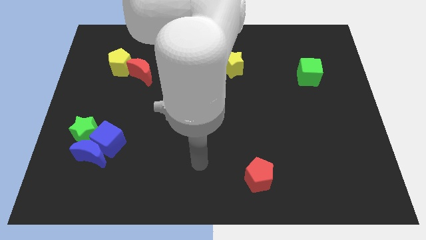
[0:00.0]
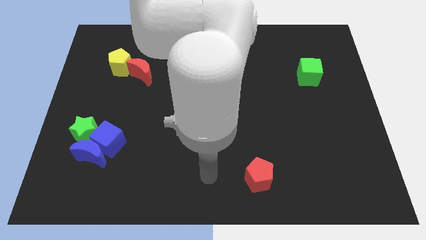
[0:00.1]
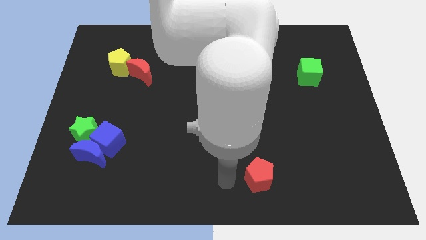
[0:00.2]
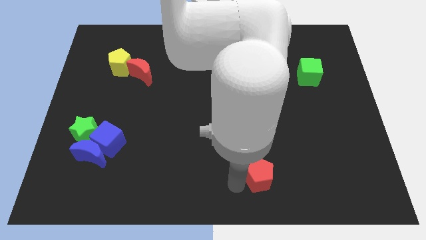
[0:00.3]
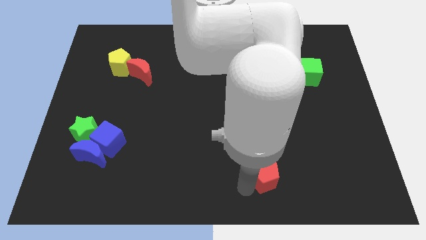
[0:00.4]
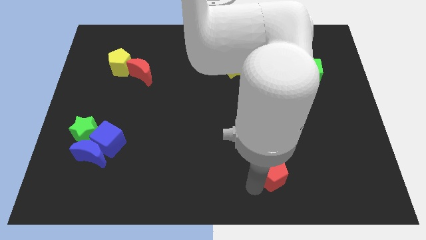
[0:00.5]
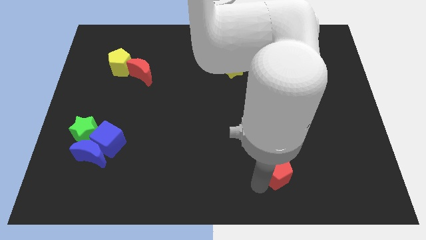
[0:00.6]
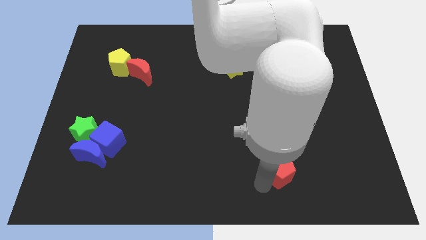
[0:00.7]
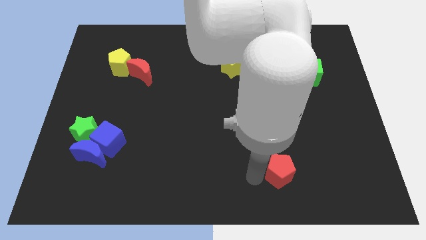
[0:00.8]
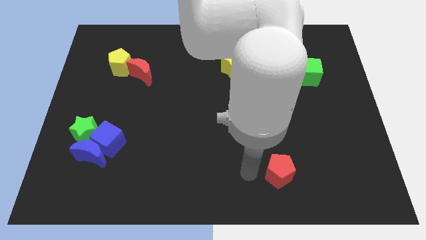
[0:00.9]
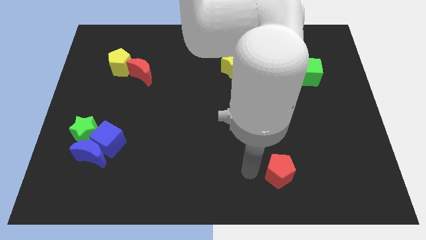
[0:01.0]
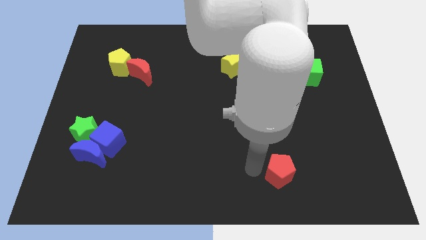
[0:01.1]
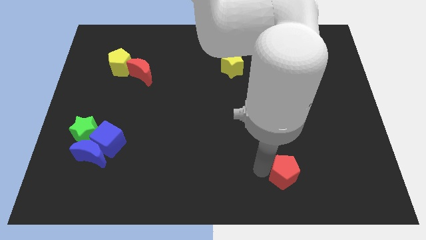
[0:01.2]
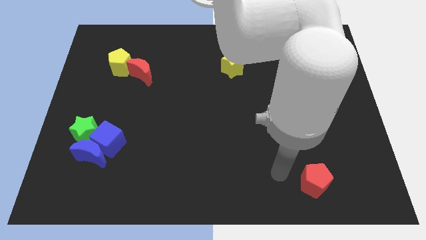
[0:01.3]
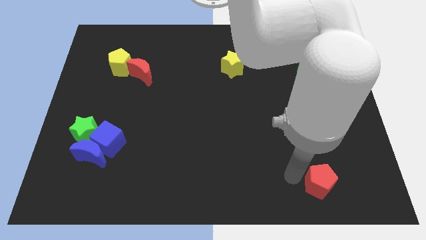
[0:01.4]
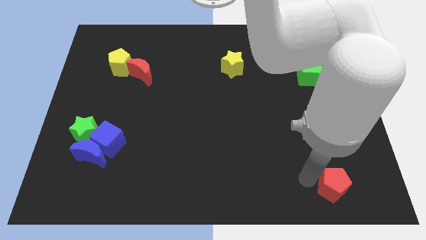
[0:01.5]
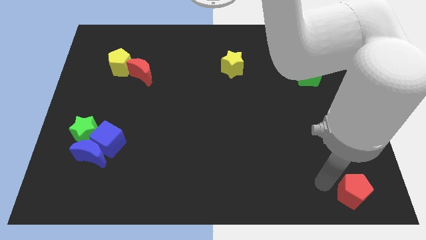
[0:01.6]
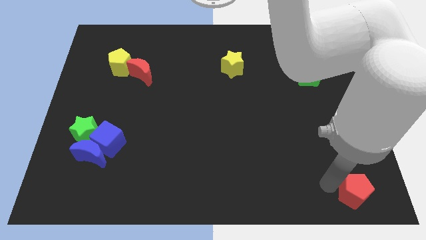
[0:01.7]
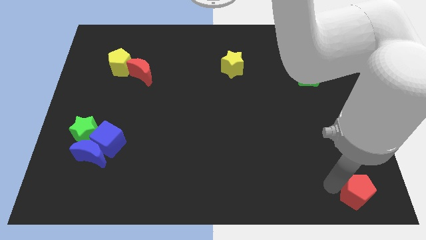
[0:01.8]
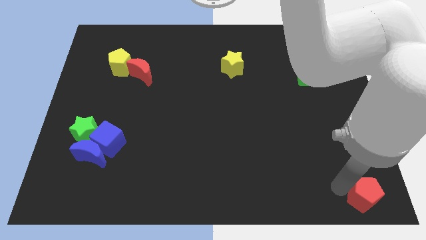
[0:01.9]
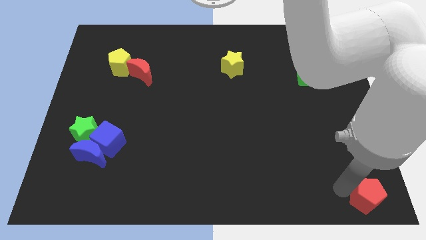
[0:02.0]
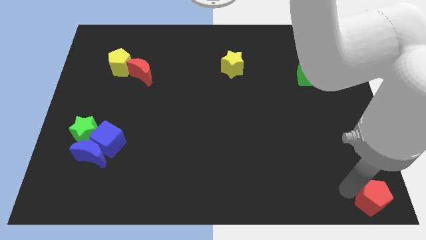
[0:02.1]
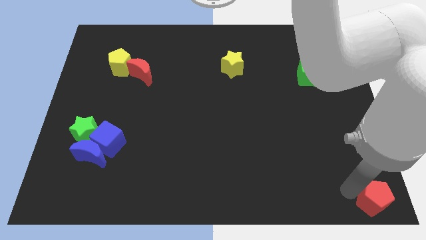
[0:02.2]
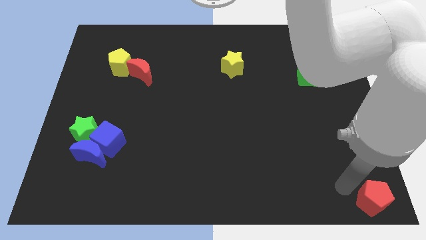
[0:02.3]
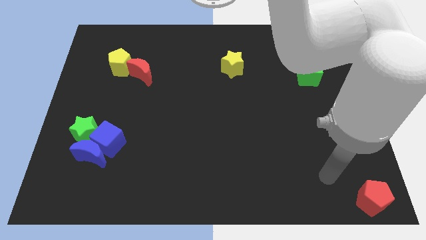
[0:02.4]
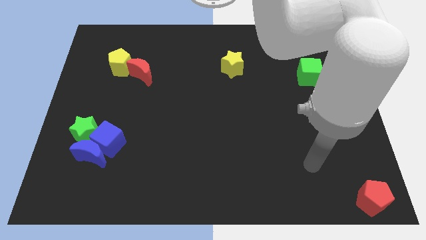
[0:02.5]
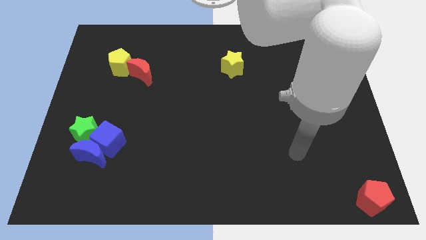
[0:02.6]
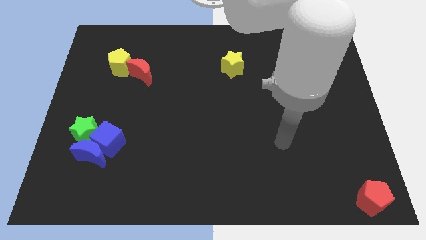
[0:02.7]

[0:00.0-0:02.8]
move the red pentagon to the bottom right

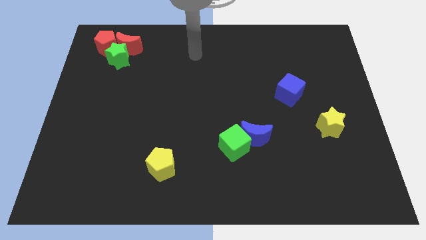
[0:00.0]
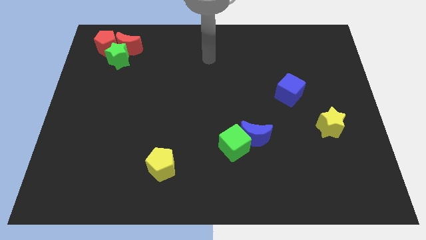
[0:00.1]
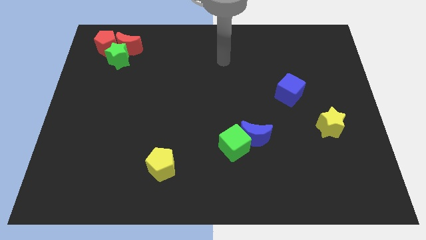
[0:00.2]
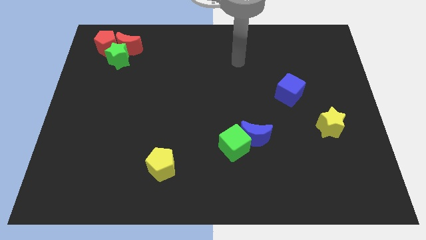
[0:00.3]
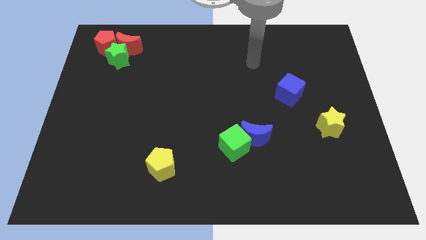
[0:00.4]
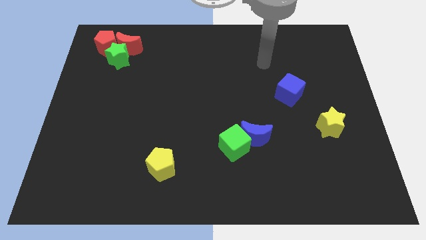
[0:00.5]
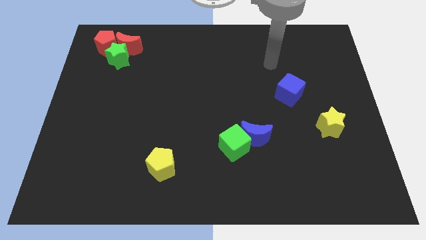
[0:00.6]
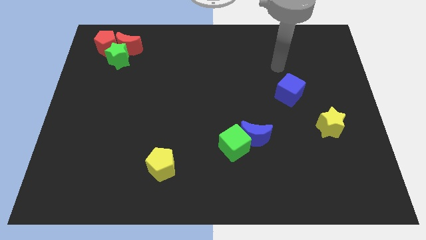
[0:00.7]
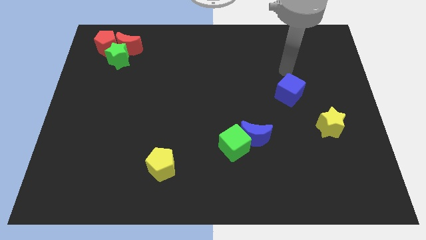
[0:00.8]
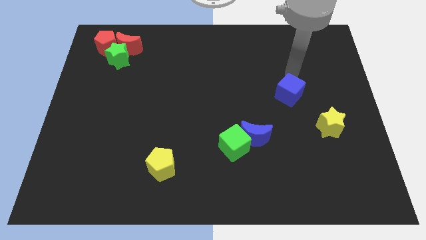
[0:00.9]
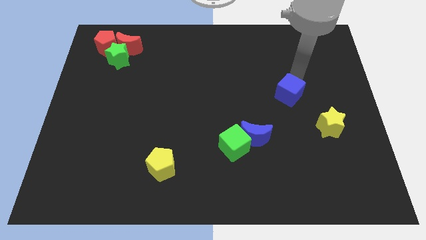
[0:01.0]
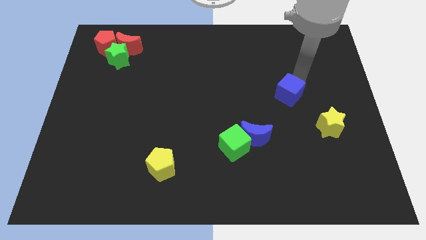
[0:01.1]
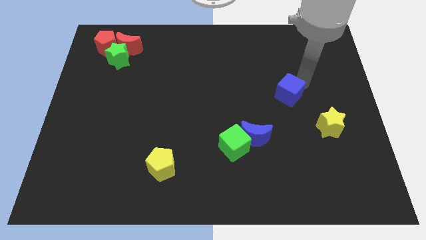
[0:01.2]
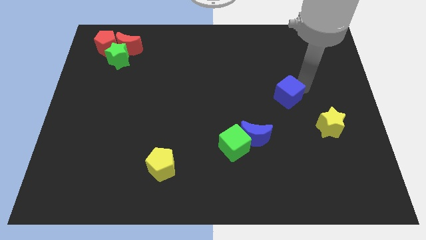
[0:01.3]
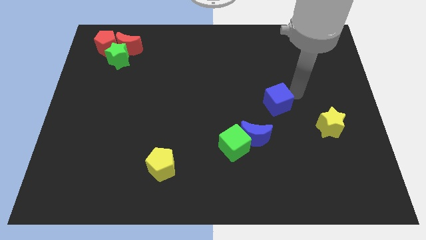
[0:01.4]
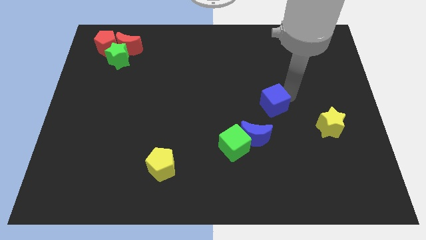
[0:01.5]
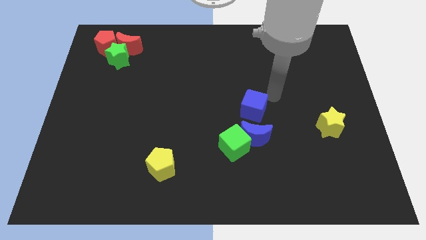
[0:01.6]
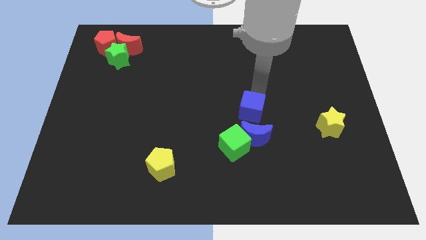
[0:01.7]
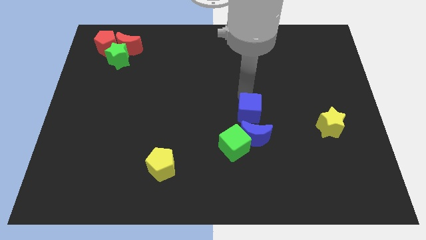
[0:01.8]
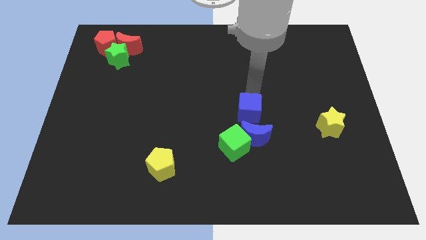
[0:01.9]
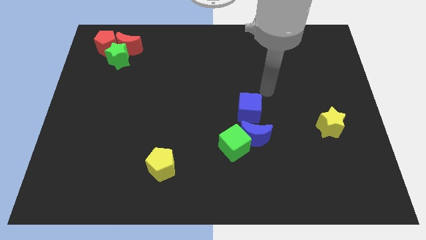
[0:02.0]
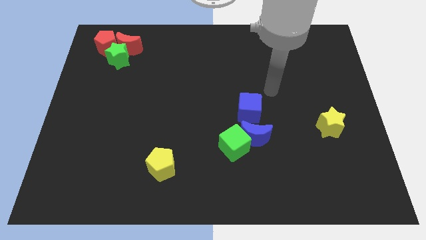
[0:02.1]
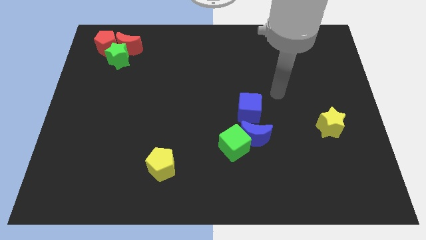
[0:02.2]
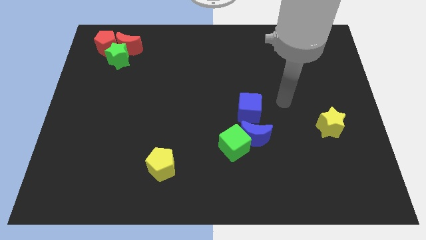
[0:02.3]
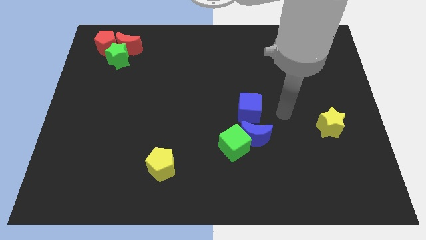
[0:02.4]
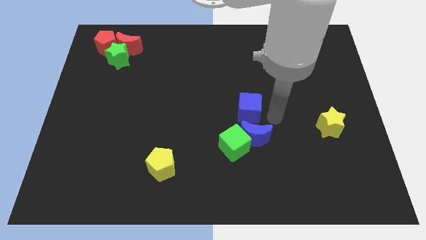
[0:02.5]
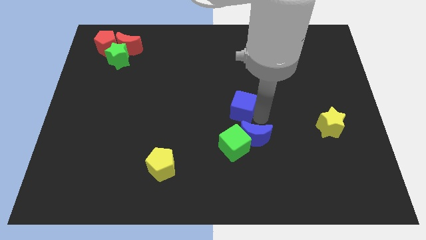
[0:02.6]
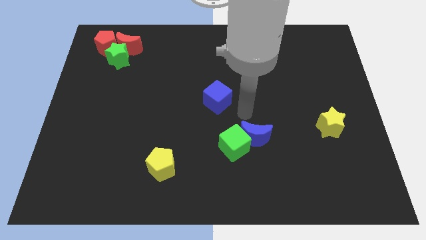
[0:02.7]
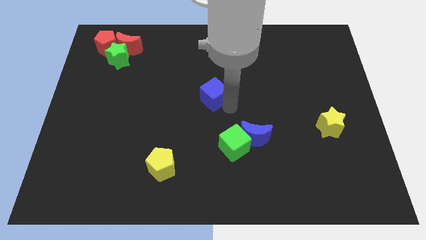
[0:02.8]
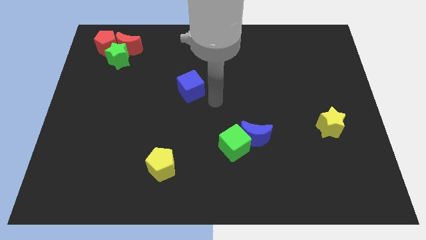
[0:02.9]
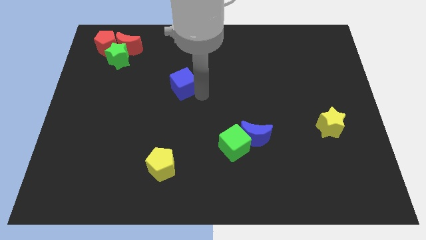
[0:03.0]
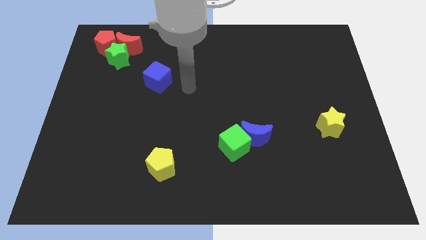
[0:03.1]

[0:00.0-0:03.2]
move the blue cube diagonally top left to the green cube

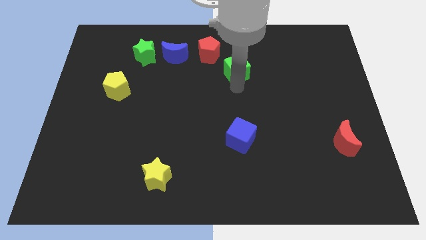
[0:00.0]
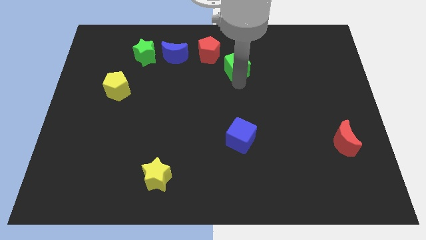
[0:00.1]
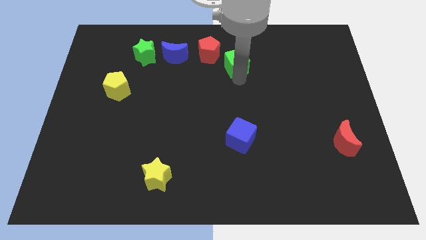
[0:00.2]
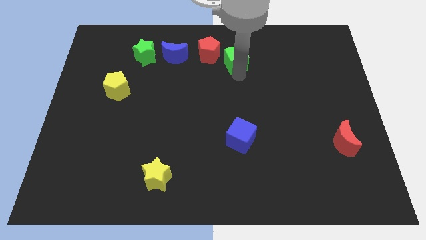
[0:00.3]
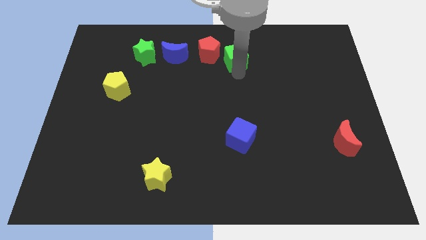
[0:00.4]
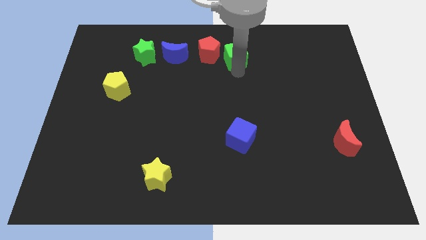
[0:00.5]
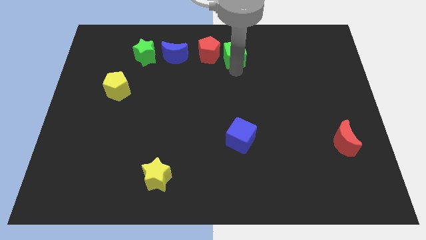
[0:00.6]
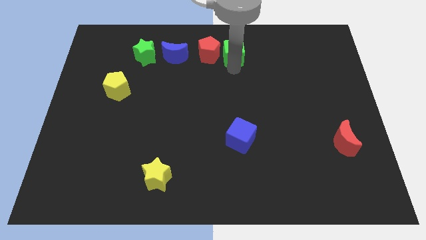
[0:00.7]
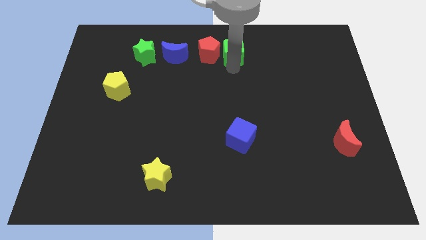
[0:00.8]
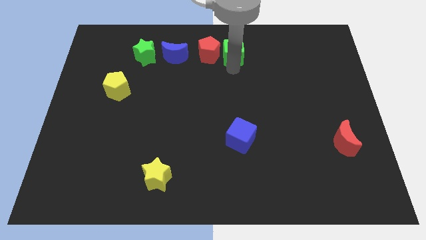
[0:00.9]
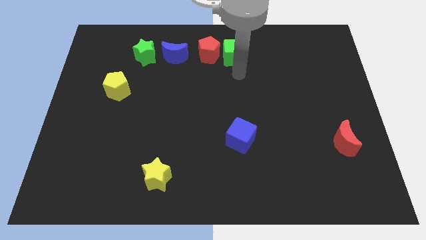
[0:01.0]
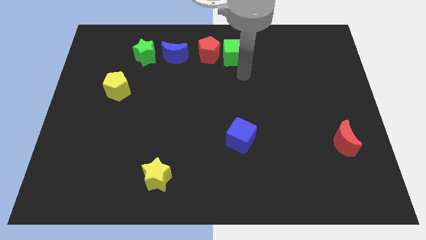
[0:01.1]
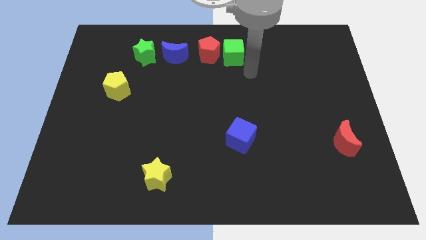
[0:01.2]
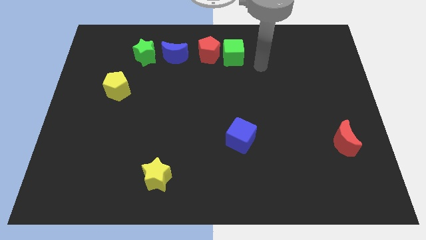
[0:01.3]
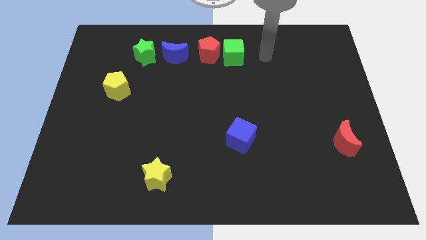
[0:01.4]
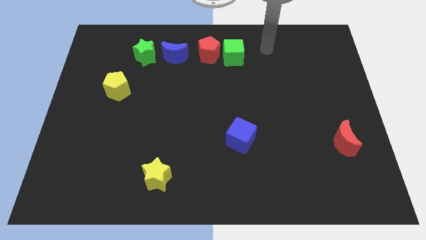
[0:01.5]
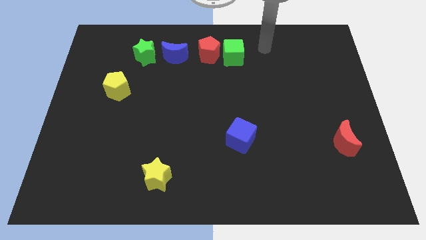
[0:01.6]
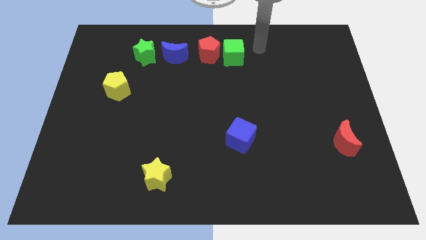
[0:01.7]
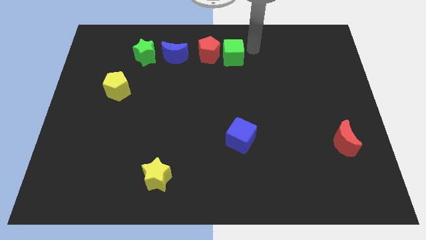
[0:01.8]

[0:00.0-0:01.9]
move the green cube to the right of red pentagon

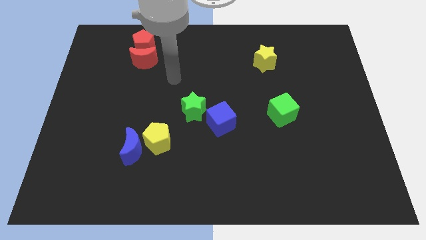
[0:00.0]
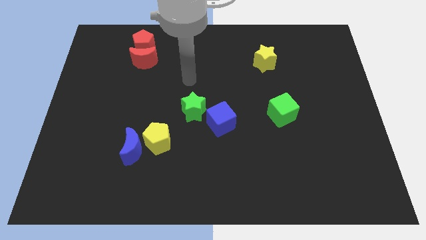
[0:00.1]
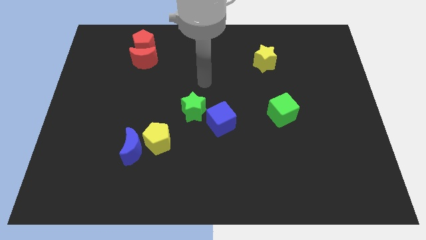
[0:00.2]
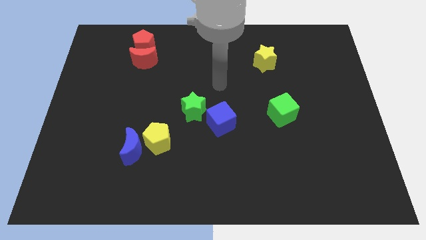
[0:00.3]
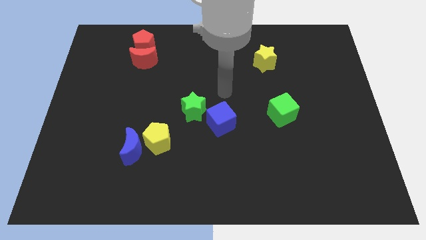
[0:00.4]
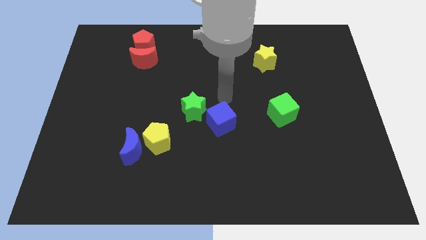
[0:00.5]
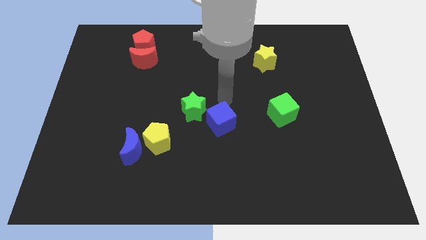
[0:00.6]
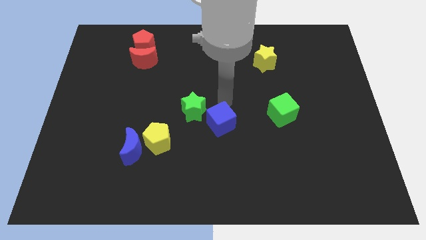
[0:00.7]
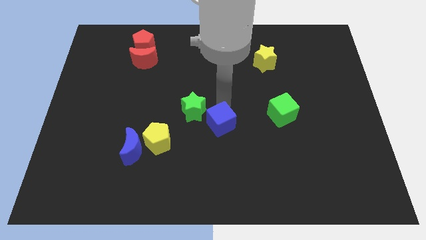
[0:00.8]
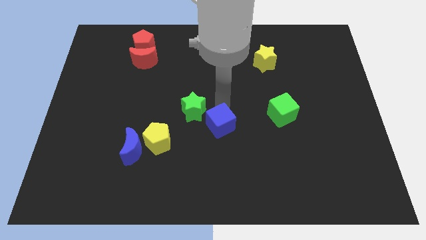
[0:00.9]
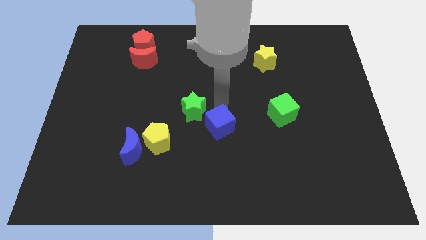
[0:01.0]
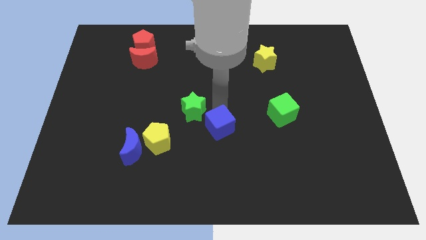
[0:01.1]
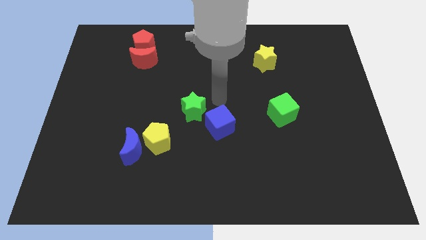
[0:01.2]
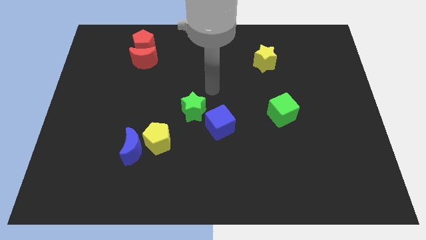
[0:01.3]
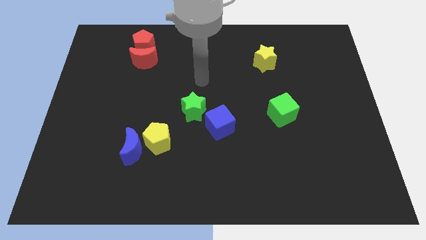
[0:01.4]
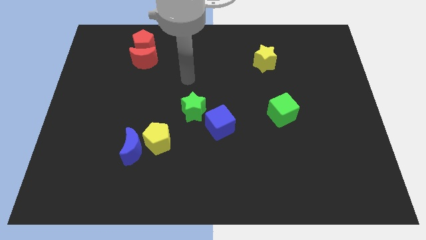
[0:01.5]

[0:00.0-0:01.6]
push the blue cube slightly to the bottom
